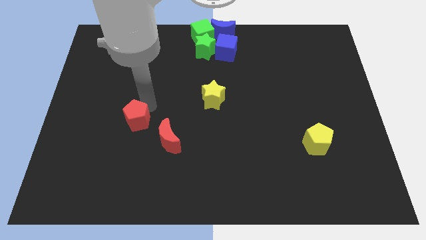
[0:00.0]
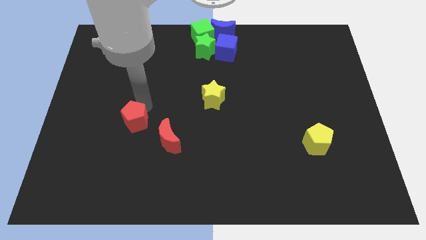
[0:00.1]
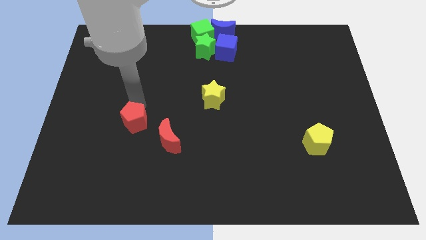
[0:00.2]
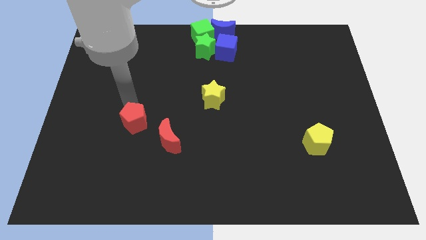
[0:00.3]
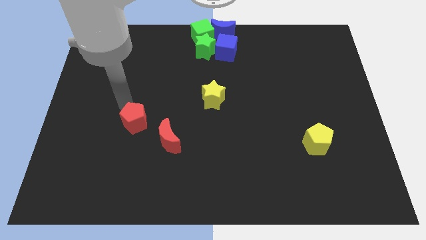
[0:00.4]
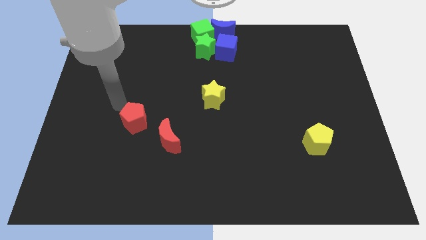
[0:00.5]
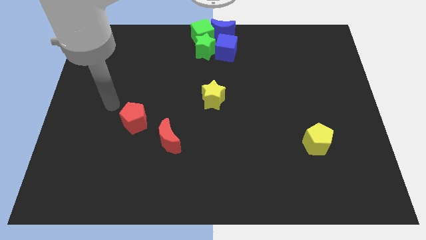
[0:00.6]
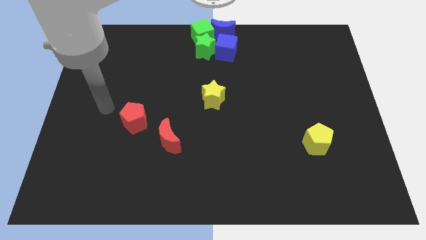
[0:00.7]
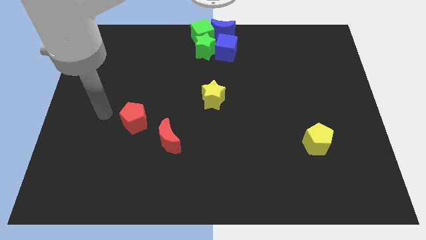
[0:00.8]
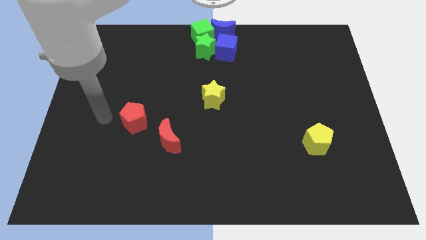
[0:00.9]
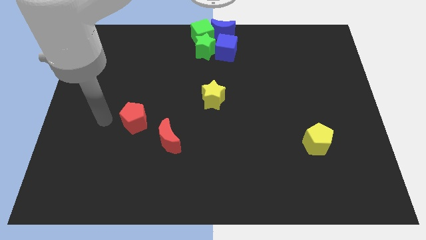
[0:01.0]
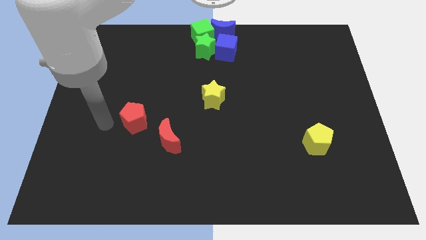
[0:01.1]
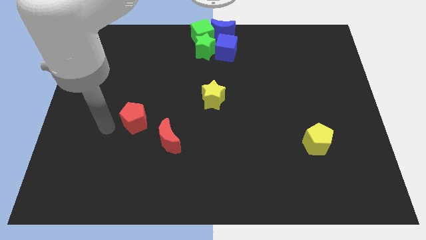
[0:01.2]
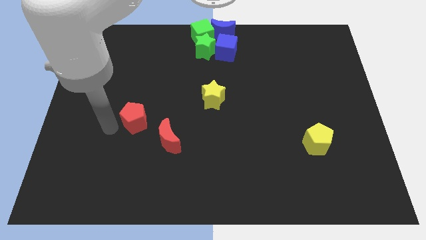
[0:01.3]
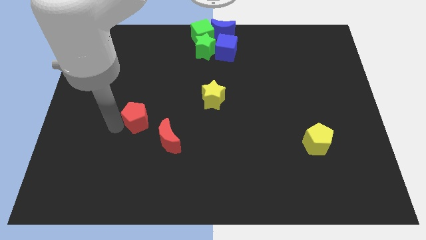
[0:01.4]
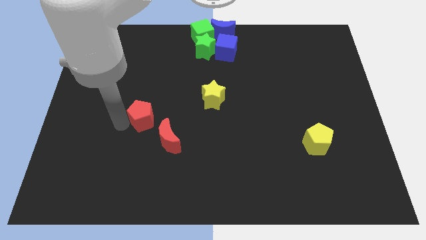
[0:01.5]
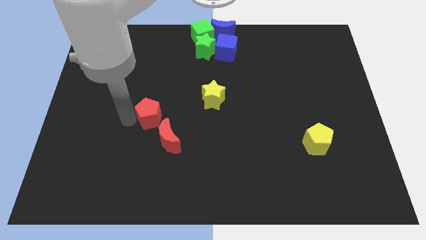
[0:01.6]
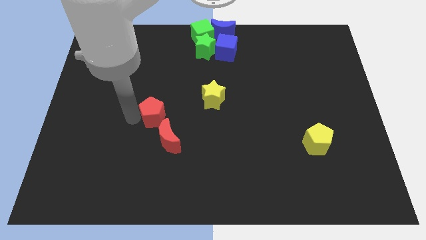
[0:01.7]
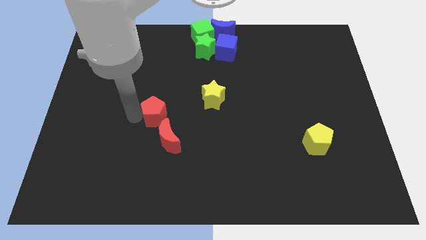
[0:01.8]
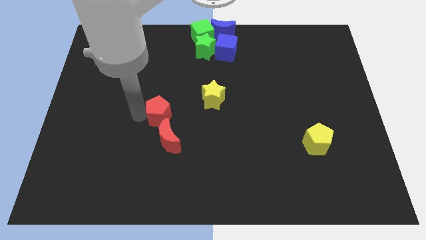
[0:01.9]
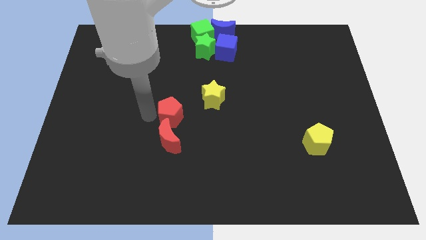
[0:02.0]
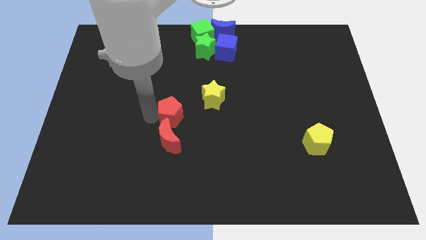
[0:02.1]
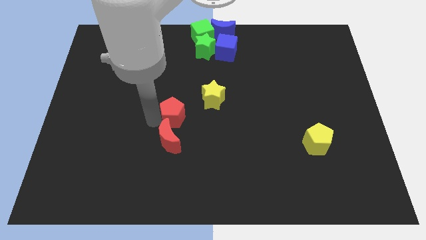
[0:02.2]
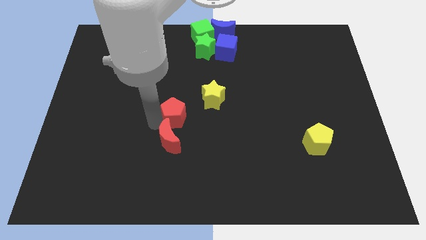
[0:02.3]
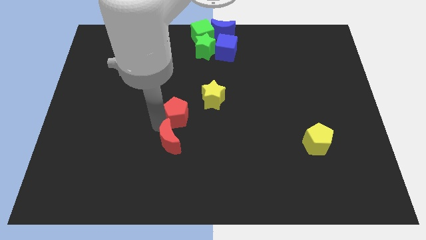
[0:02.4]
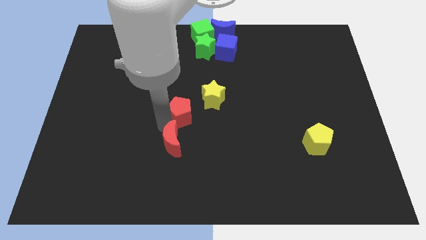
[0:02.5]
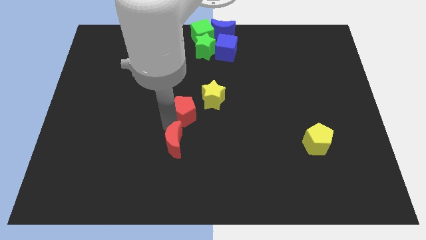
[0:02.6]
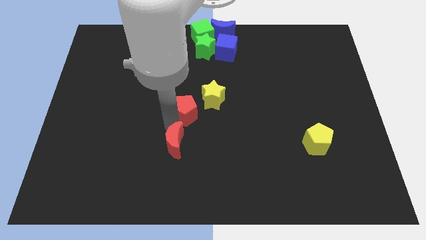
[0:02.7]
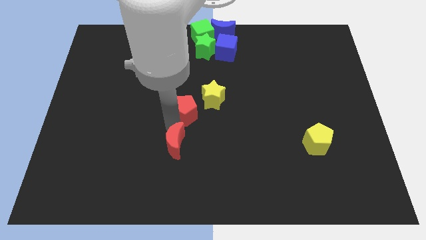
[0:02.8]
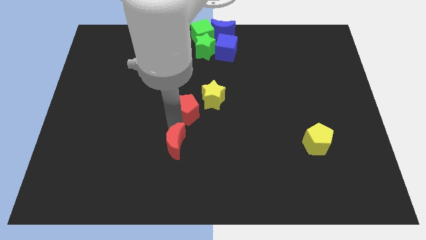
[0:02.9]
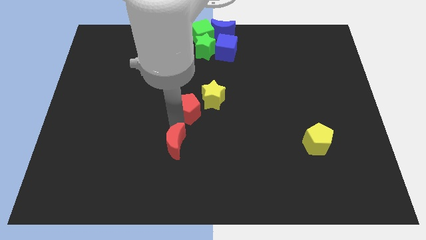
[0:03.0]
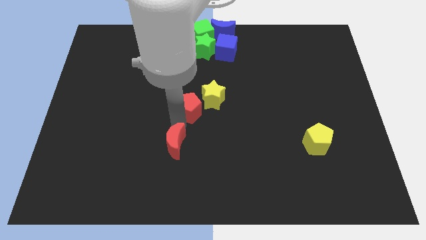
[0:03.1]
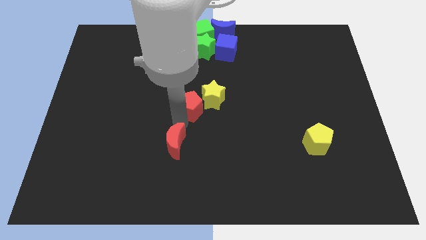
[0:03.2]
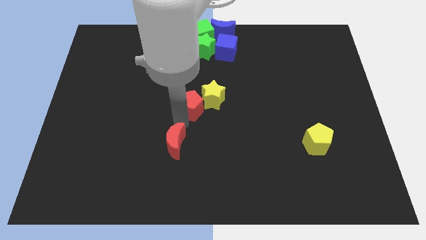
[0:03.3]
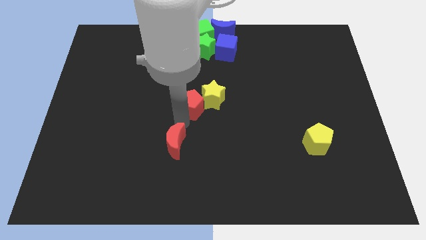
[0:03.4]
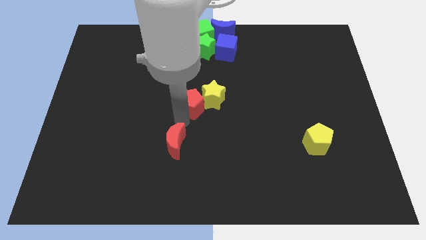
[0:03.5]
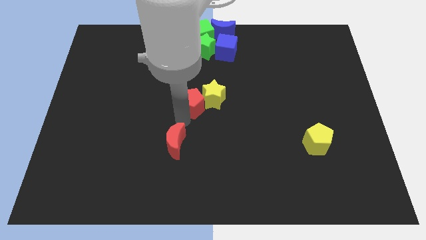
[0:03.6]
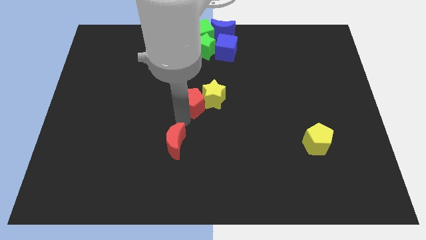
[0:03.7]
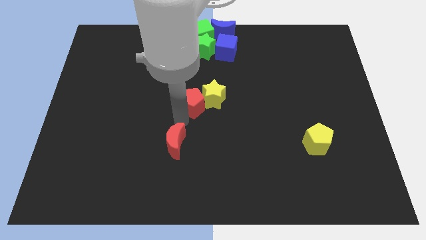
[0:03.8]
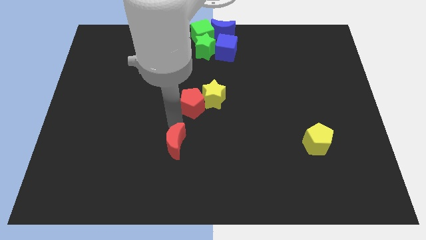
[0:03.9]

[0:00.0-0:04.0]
move the red pentagon to the bottom left of the yellow star

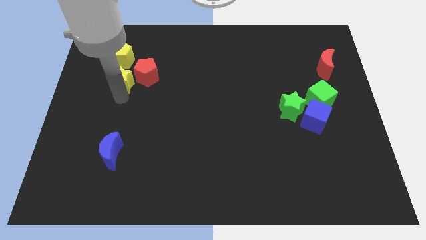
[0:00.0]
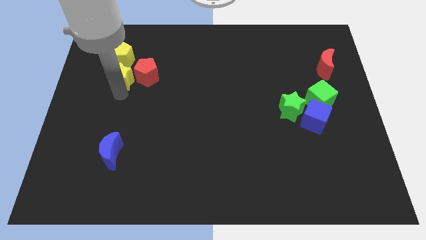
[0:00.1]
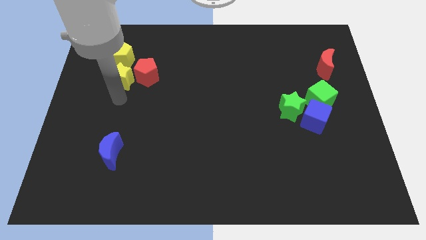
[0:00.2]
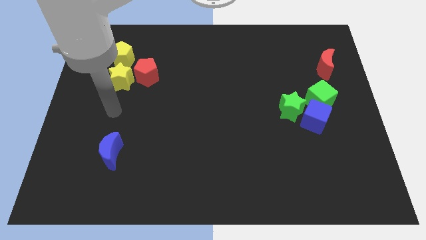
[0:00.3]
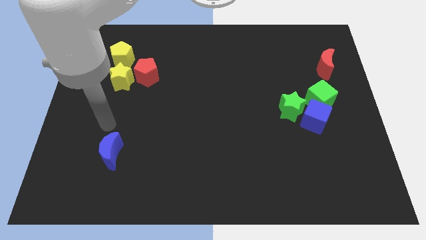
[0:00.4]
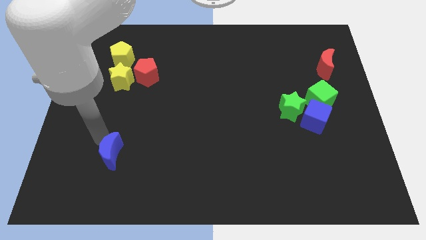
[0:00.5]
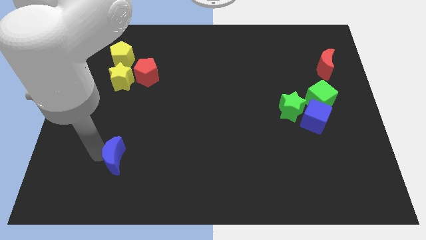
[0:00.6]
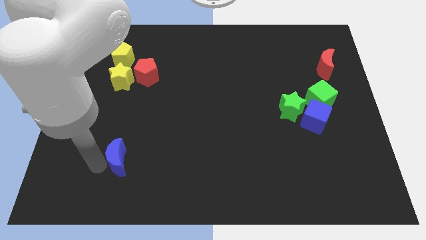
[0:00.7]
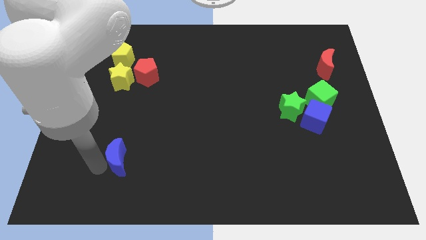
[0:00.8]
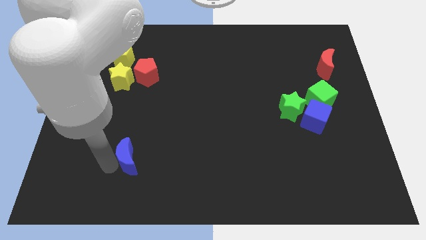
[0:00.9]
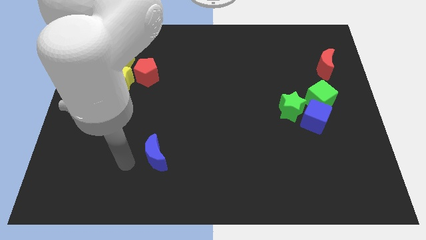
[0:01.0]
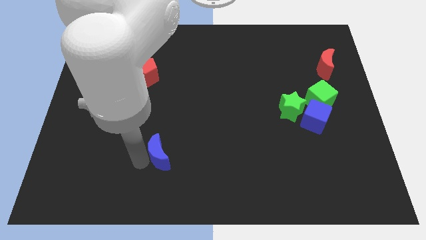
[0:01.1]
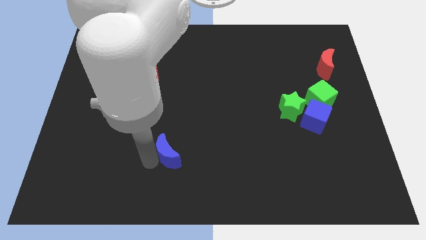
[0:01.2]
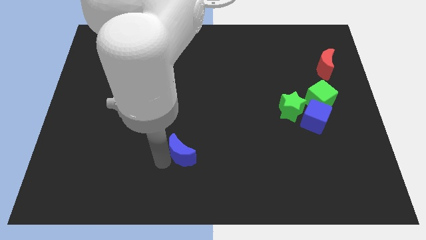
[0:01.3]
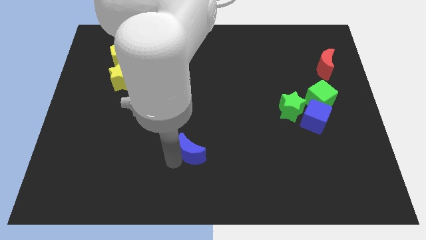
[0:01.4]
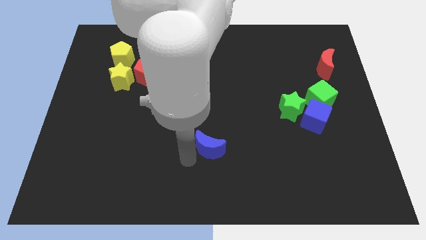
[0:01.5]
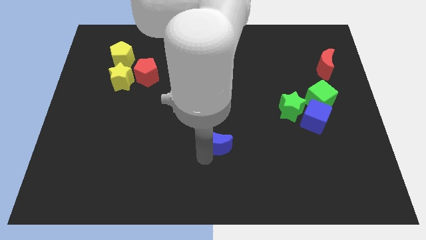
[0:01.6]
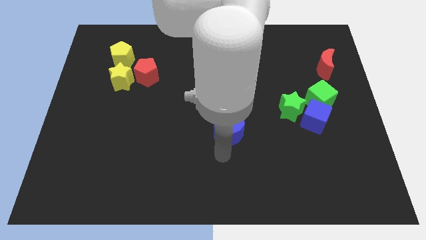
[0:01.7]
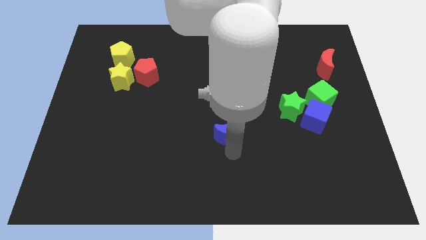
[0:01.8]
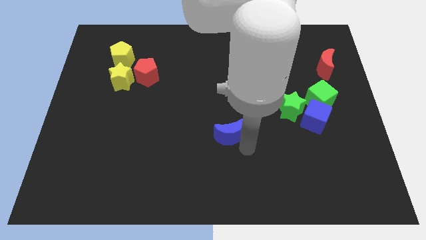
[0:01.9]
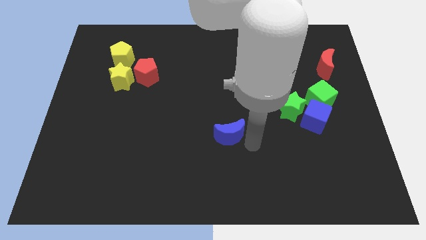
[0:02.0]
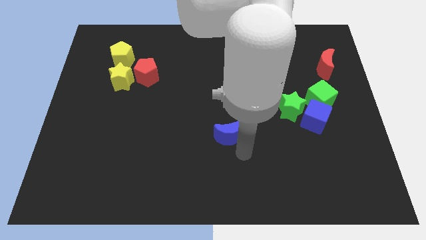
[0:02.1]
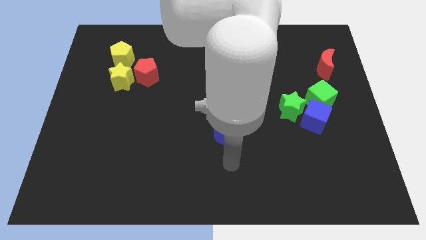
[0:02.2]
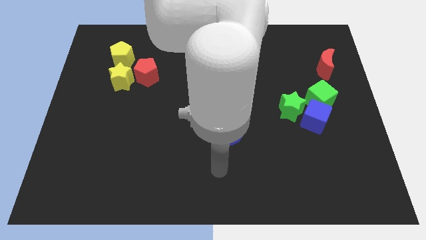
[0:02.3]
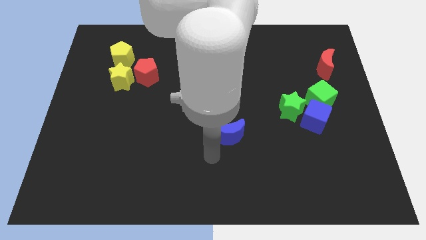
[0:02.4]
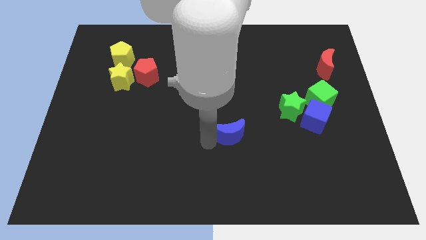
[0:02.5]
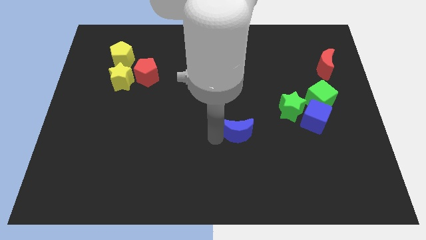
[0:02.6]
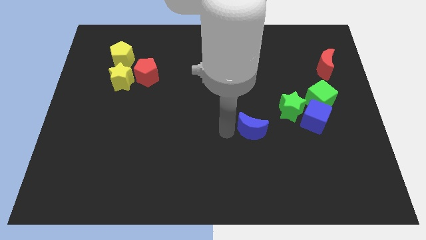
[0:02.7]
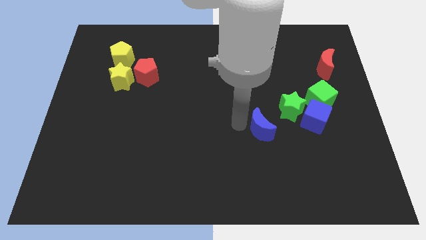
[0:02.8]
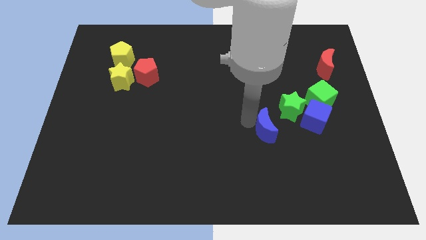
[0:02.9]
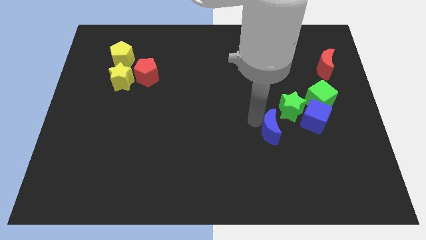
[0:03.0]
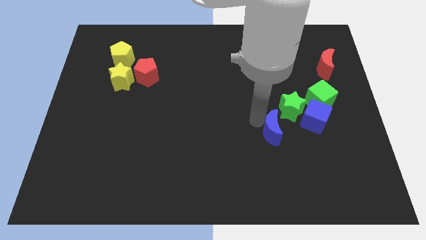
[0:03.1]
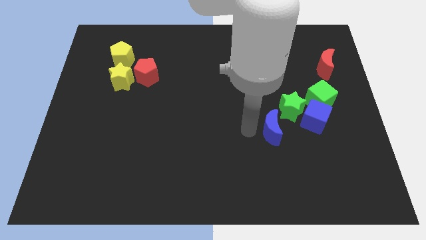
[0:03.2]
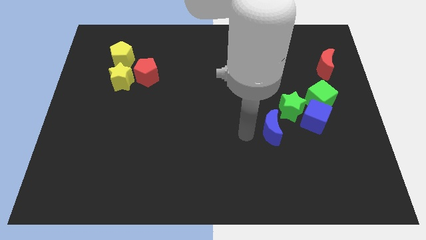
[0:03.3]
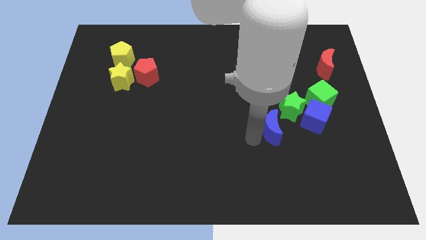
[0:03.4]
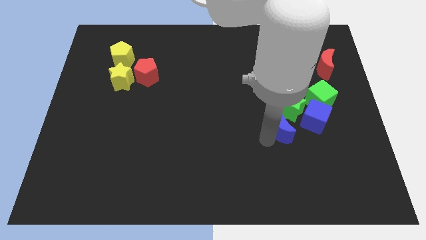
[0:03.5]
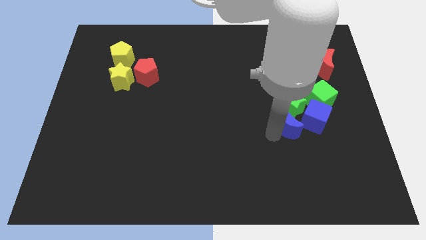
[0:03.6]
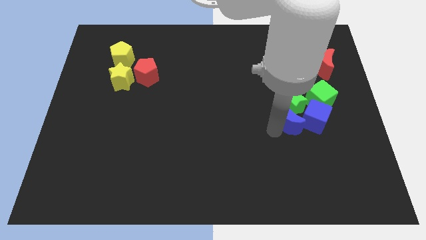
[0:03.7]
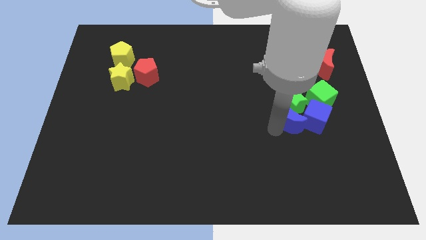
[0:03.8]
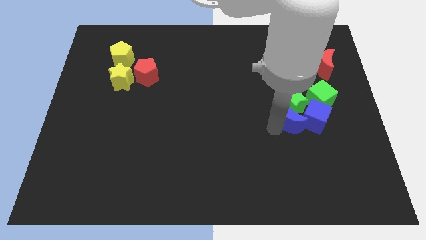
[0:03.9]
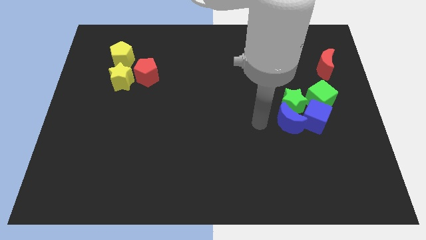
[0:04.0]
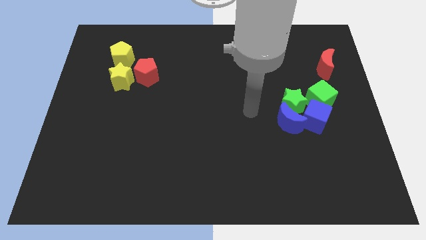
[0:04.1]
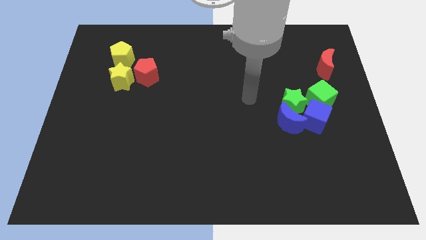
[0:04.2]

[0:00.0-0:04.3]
slide the blue moon into the group of blocks

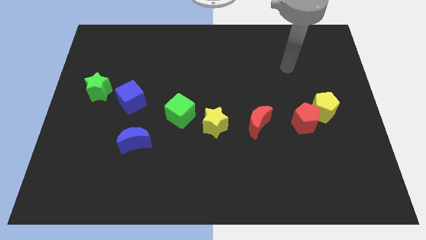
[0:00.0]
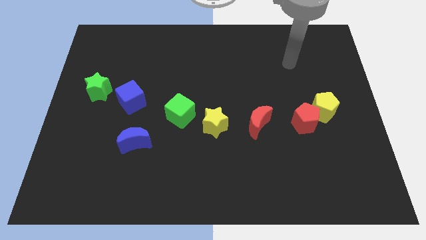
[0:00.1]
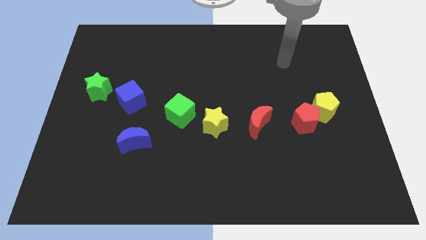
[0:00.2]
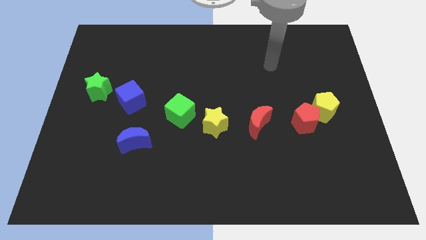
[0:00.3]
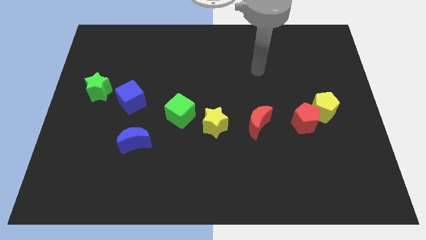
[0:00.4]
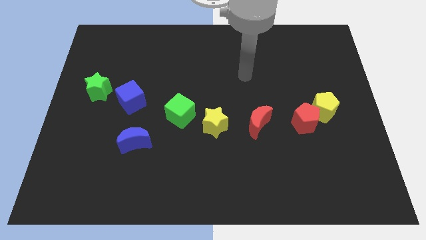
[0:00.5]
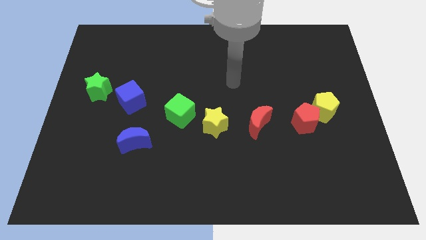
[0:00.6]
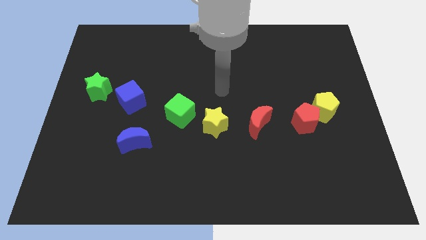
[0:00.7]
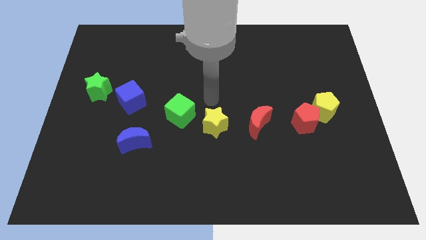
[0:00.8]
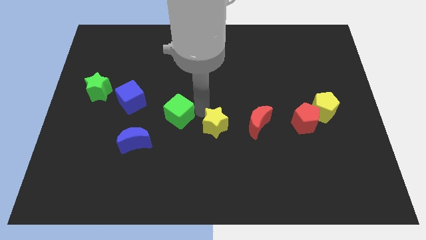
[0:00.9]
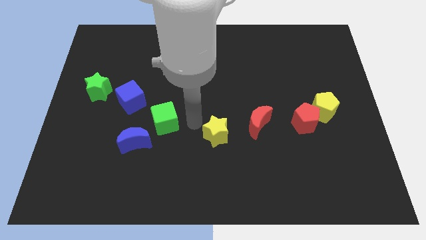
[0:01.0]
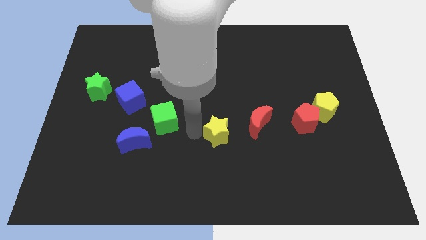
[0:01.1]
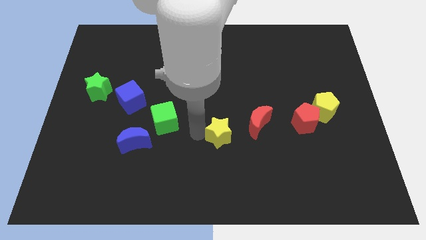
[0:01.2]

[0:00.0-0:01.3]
place the arm near the green cube
